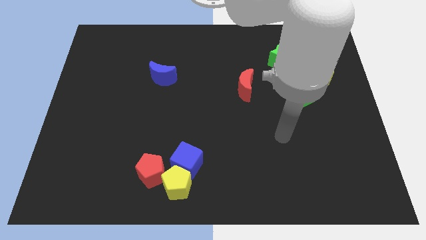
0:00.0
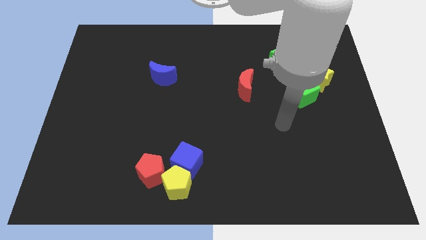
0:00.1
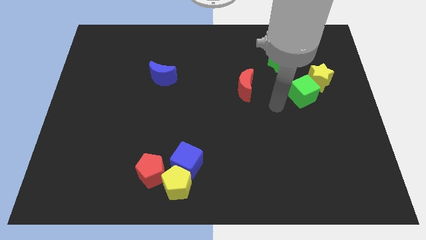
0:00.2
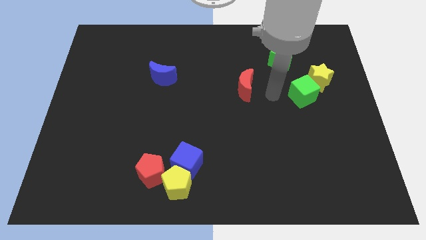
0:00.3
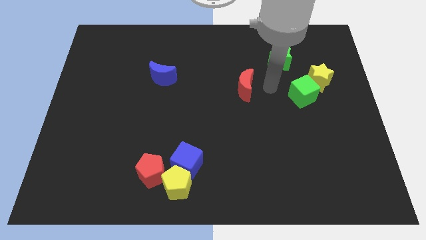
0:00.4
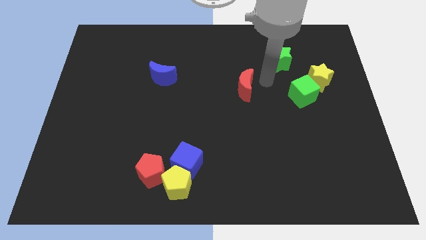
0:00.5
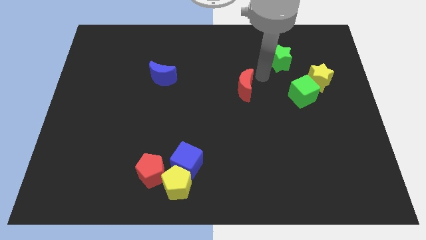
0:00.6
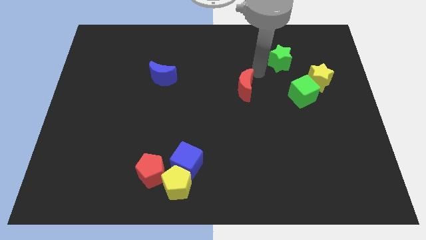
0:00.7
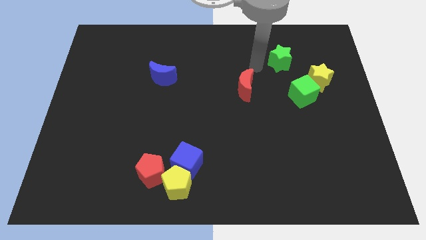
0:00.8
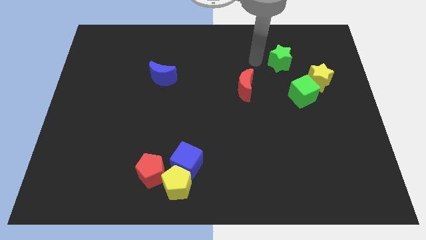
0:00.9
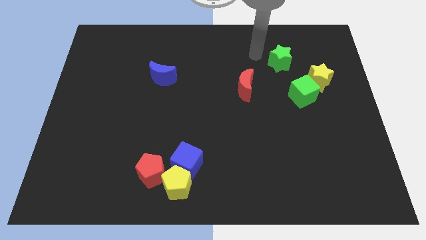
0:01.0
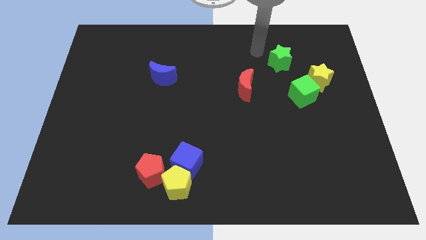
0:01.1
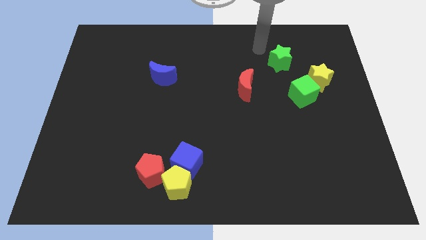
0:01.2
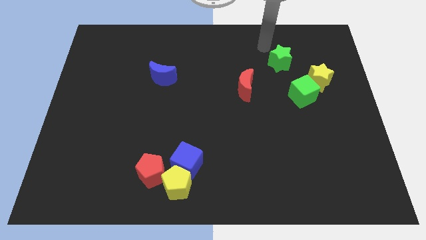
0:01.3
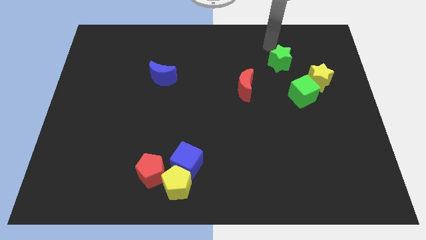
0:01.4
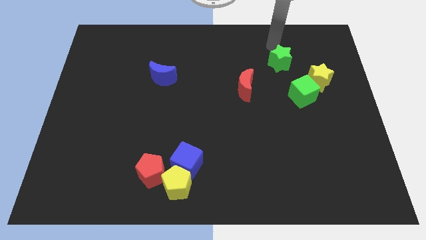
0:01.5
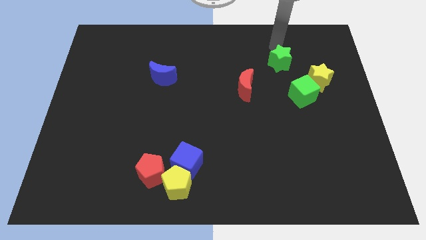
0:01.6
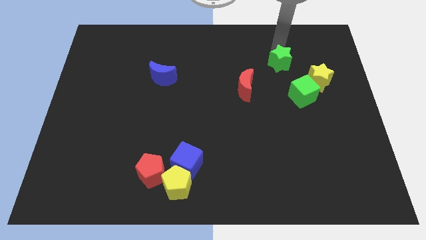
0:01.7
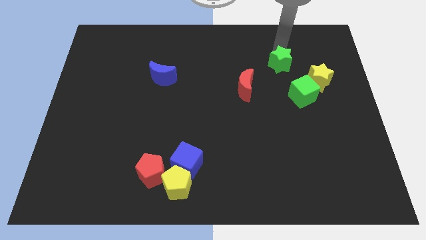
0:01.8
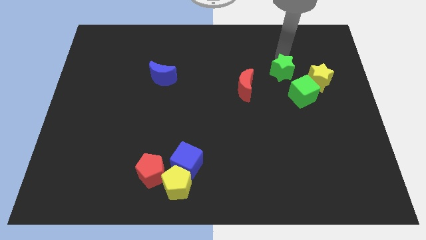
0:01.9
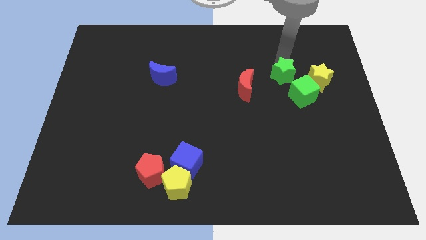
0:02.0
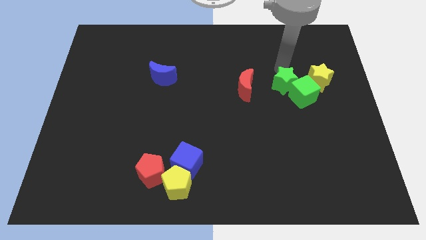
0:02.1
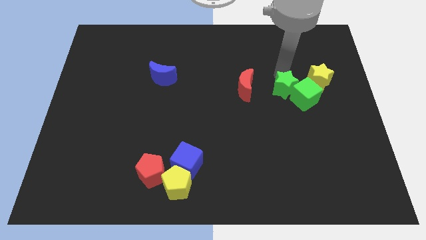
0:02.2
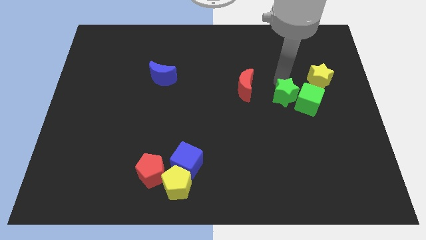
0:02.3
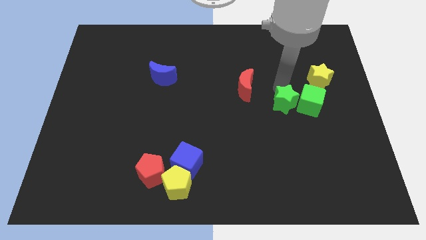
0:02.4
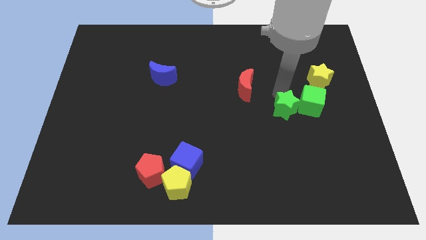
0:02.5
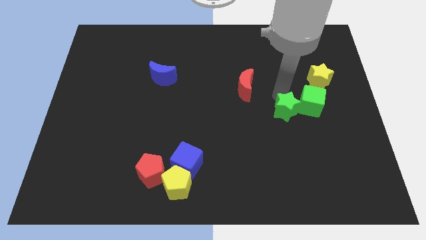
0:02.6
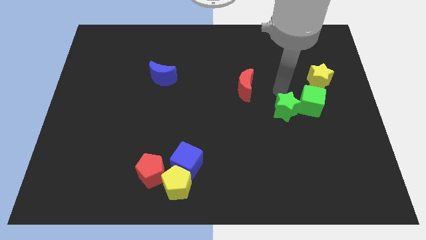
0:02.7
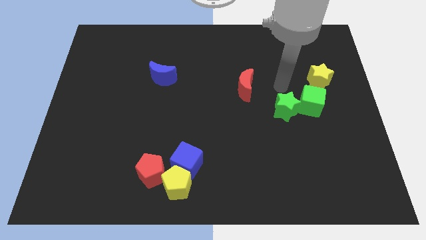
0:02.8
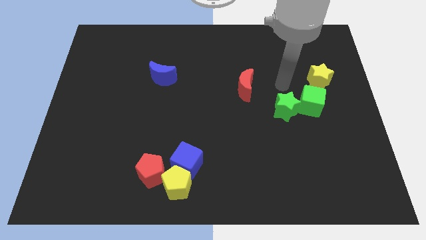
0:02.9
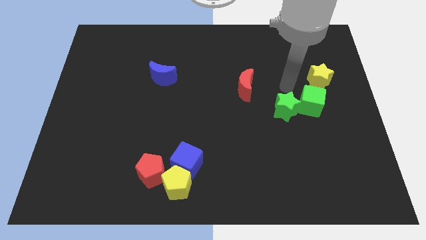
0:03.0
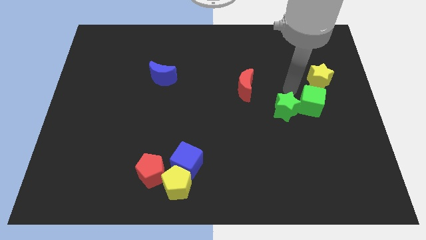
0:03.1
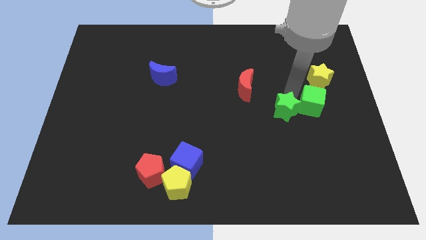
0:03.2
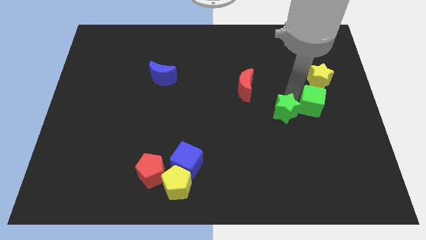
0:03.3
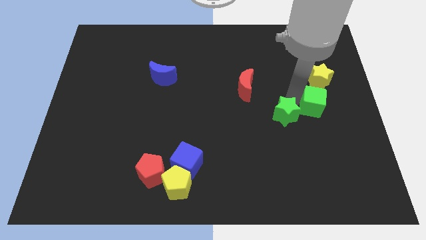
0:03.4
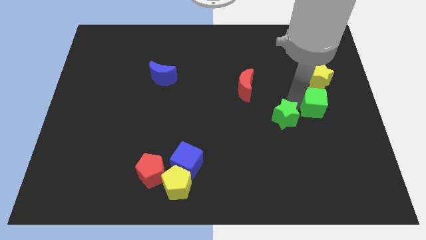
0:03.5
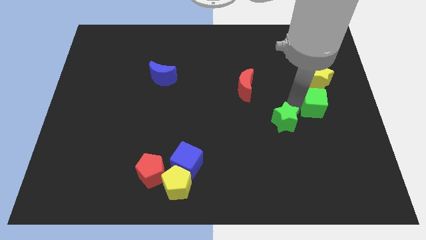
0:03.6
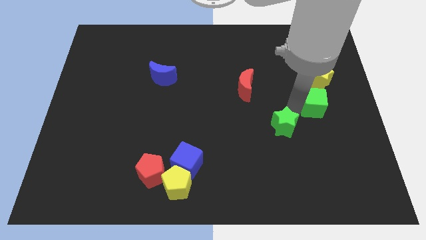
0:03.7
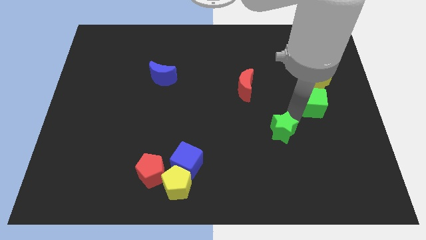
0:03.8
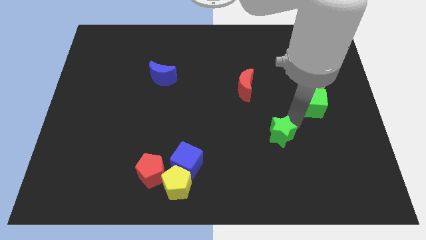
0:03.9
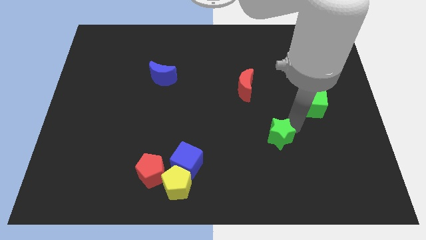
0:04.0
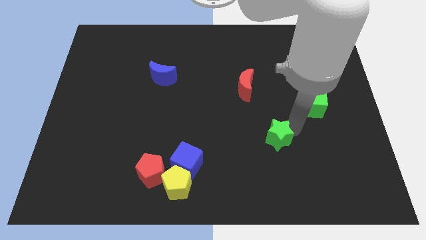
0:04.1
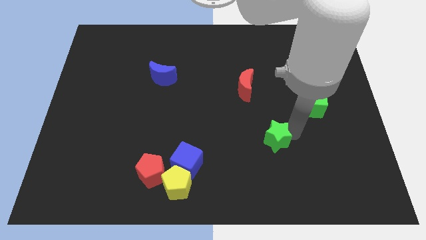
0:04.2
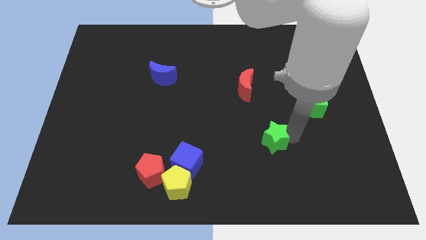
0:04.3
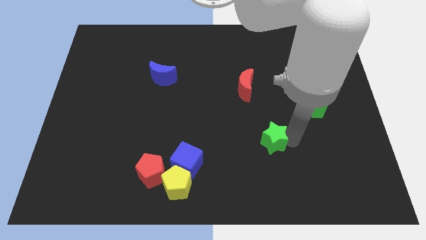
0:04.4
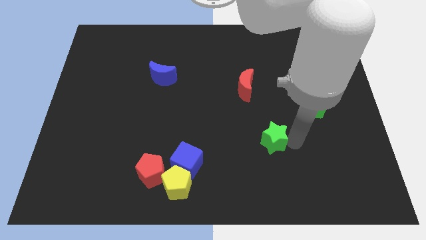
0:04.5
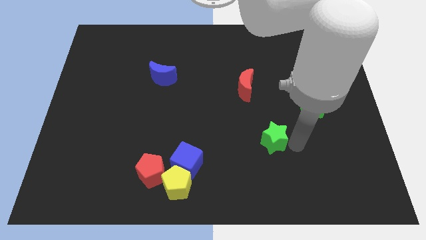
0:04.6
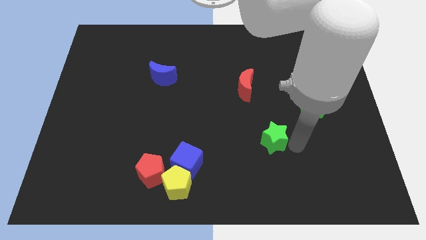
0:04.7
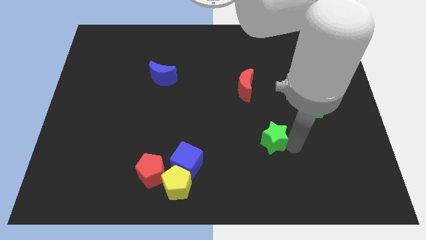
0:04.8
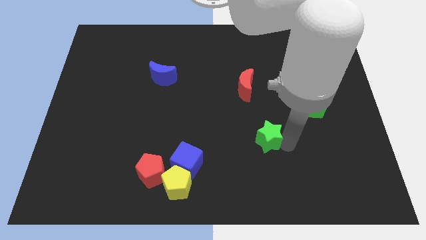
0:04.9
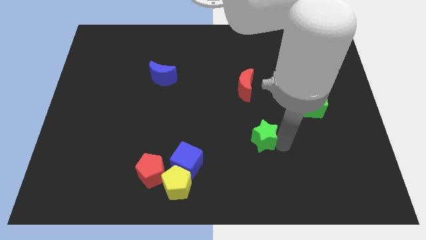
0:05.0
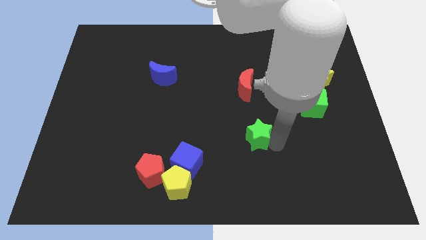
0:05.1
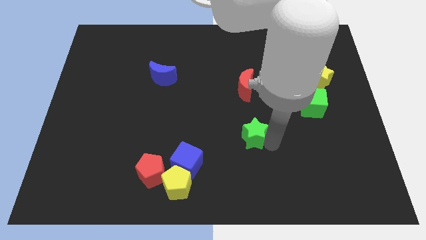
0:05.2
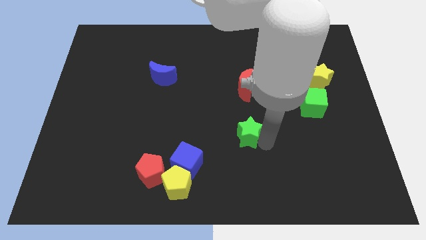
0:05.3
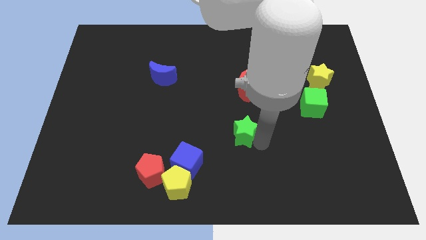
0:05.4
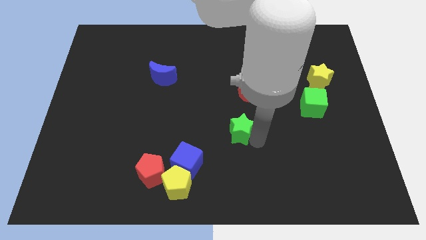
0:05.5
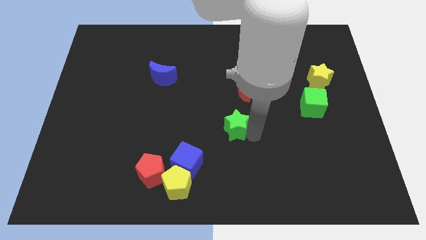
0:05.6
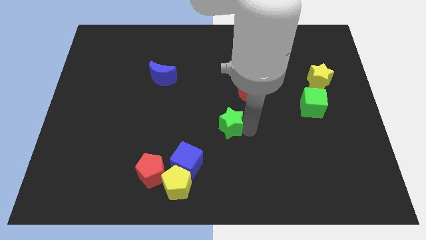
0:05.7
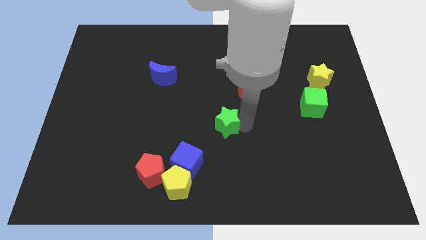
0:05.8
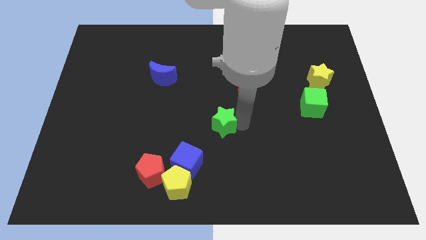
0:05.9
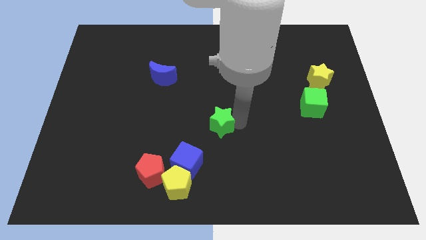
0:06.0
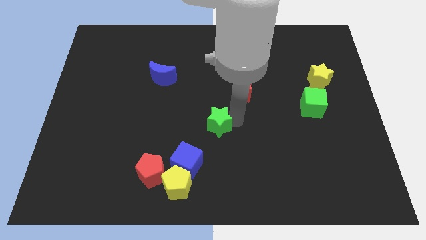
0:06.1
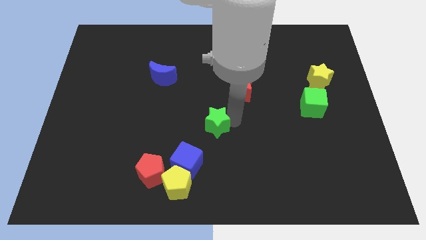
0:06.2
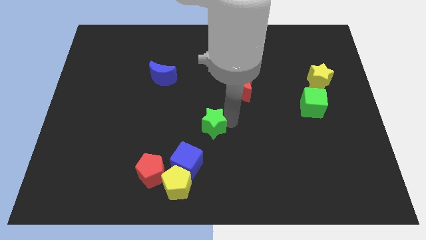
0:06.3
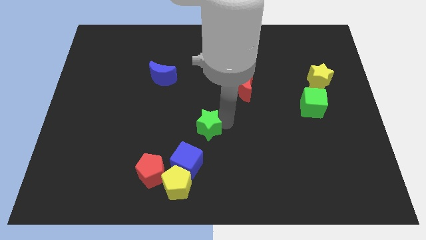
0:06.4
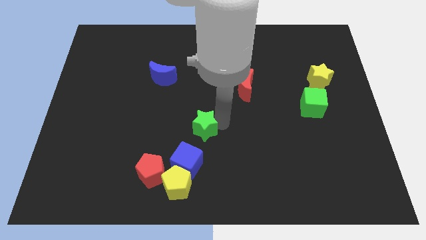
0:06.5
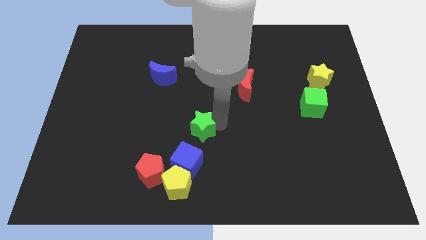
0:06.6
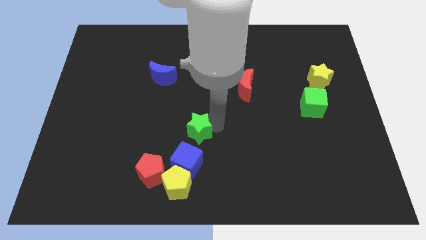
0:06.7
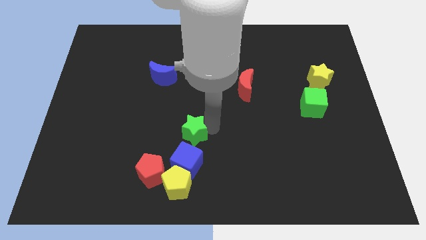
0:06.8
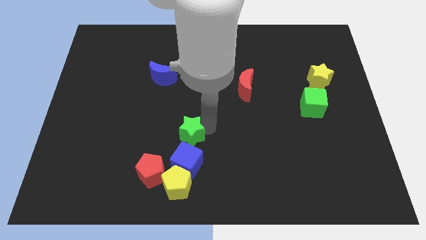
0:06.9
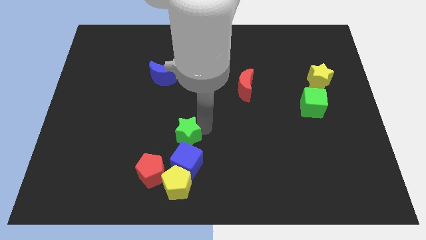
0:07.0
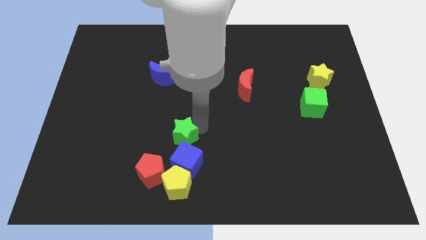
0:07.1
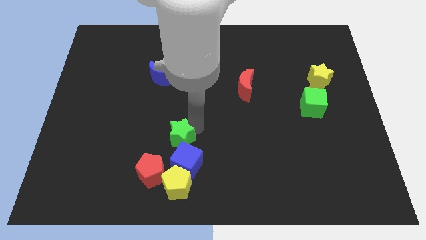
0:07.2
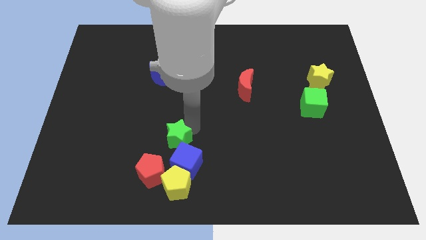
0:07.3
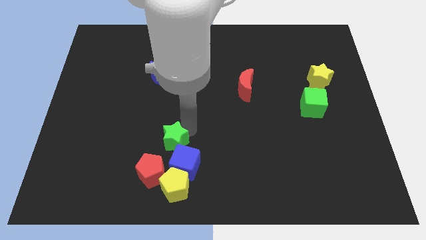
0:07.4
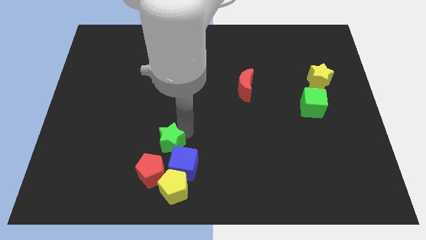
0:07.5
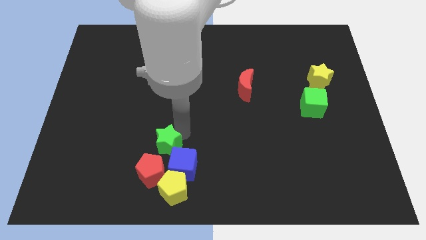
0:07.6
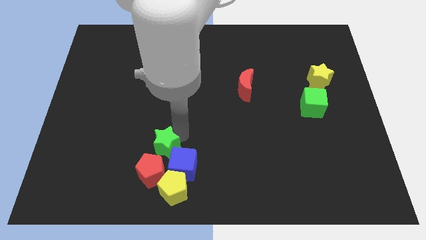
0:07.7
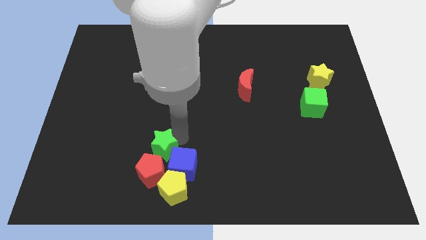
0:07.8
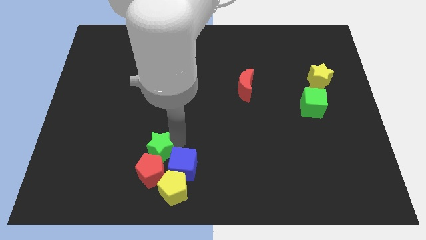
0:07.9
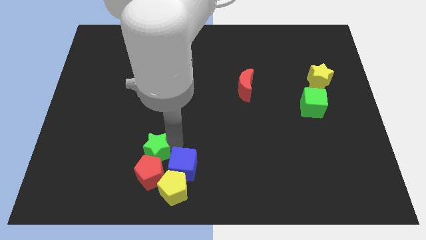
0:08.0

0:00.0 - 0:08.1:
push the green star close to the red pentagon

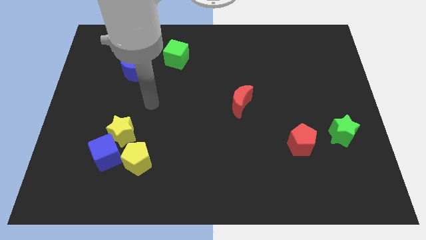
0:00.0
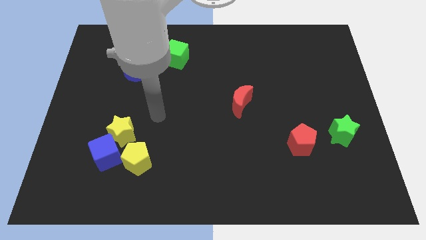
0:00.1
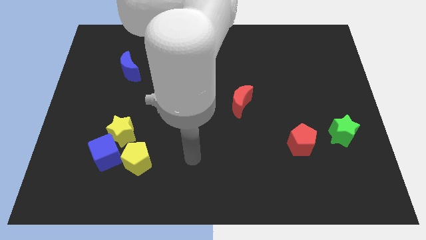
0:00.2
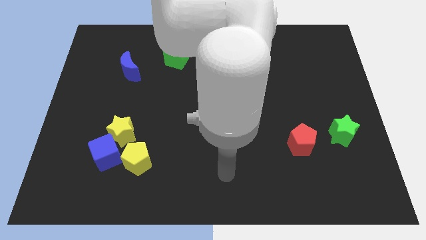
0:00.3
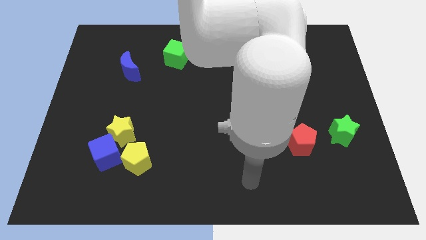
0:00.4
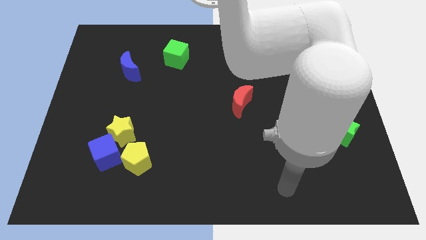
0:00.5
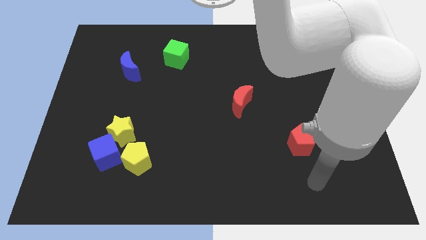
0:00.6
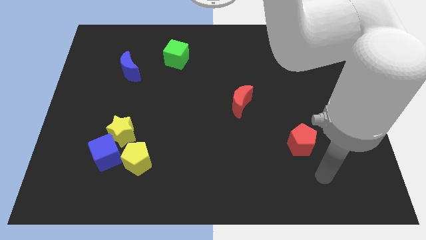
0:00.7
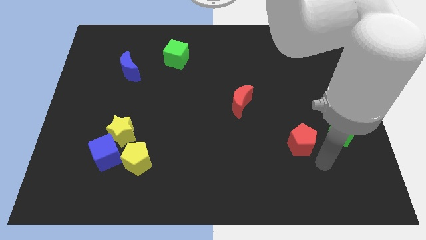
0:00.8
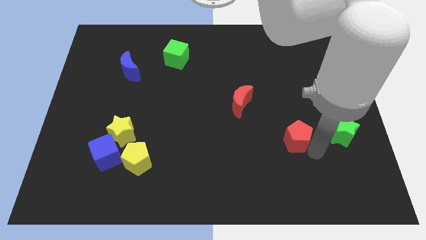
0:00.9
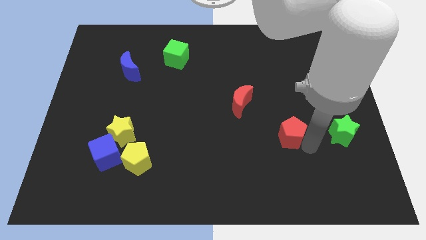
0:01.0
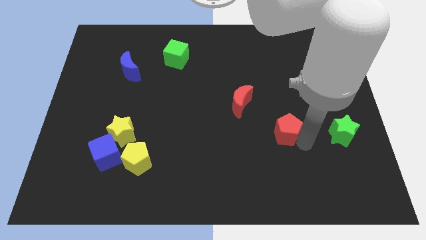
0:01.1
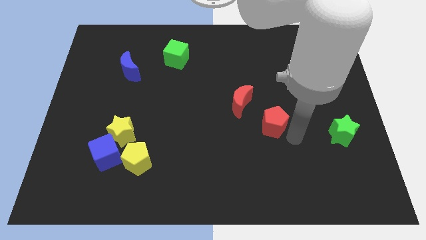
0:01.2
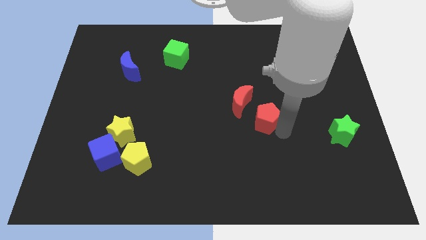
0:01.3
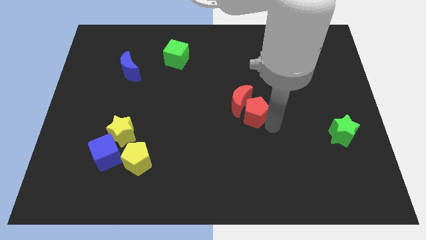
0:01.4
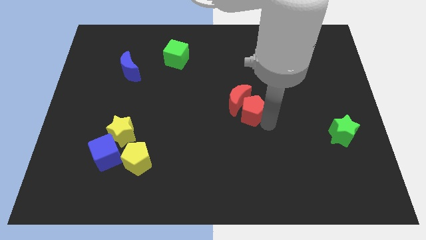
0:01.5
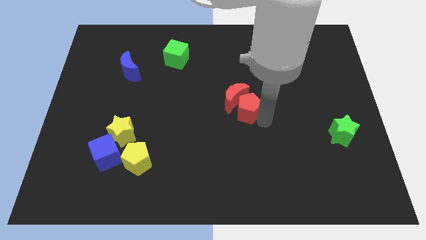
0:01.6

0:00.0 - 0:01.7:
push the red pentagon close to the red moon
